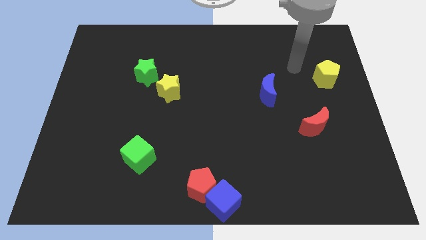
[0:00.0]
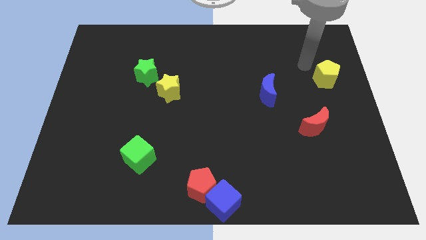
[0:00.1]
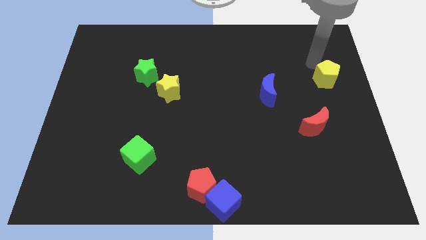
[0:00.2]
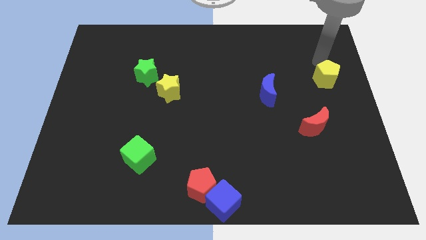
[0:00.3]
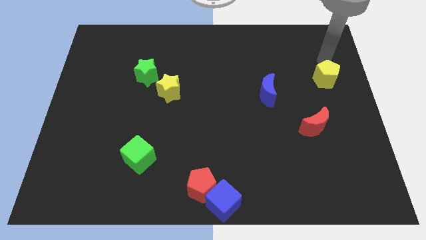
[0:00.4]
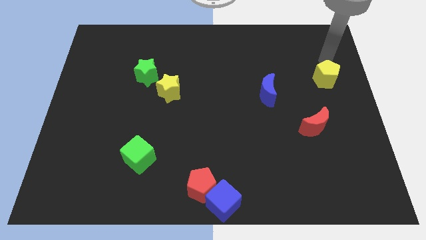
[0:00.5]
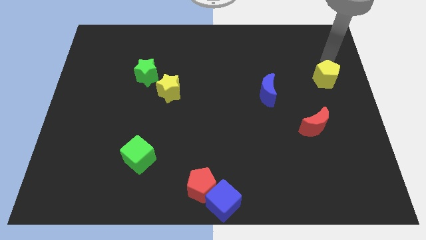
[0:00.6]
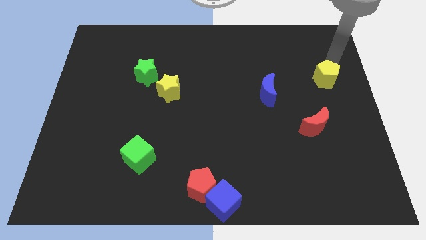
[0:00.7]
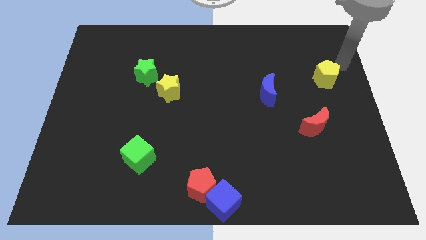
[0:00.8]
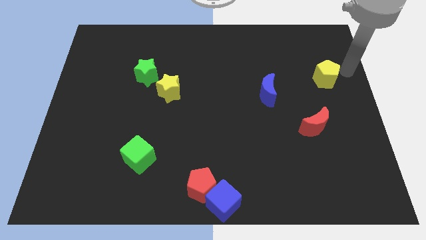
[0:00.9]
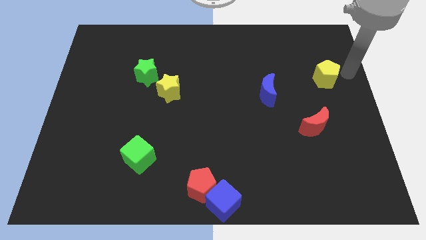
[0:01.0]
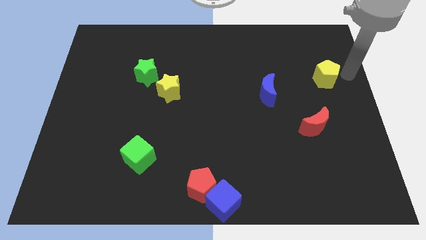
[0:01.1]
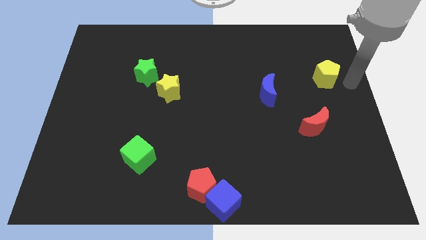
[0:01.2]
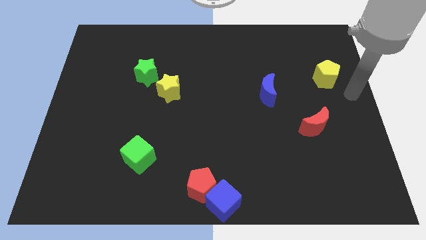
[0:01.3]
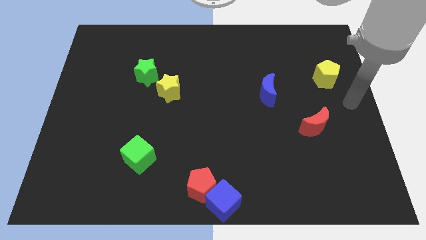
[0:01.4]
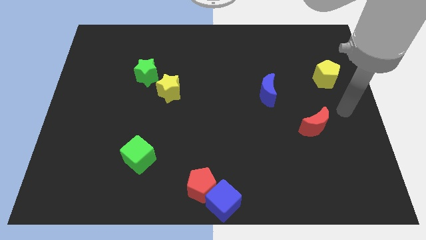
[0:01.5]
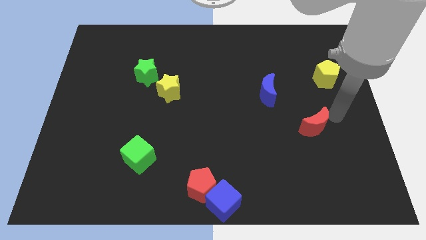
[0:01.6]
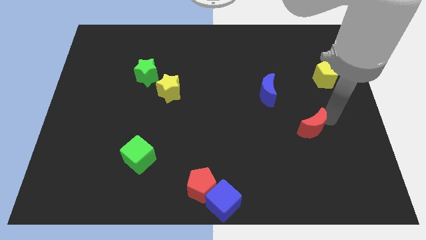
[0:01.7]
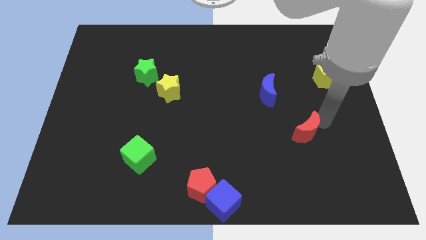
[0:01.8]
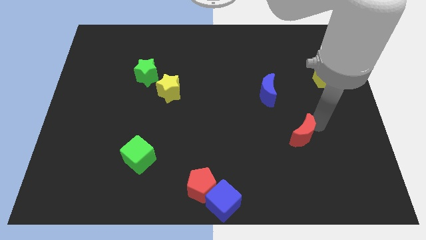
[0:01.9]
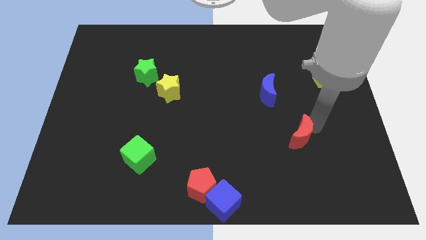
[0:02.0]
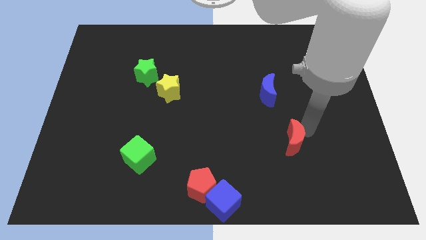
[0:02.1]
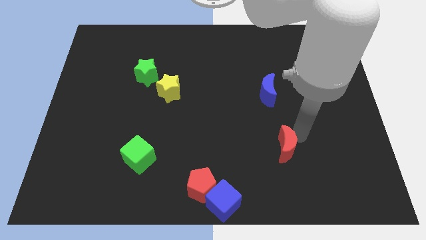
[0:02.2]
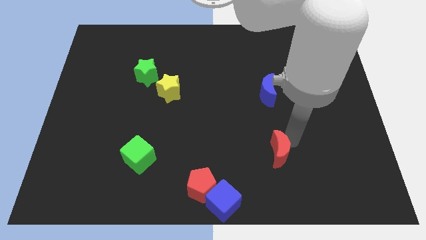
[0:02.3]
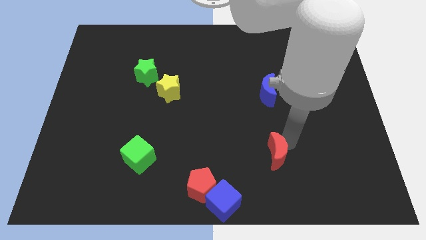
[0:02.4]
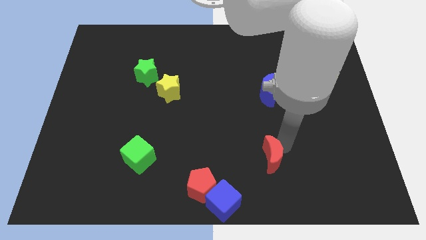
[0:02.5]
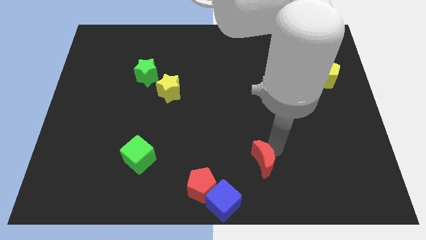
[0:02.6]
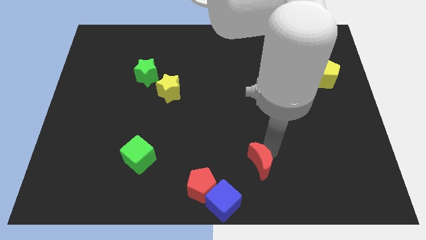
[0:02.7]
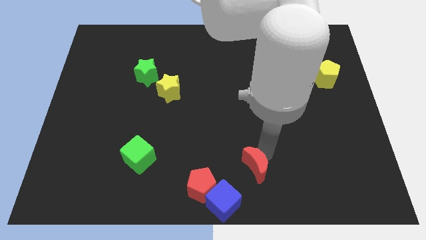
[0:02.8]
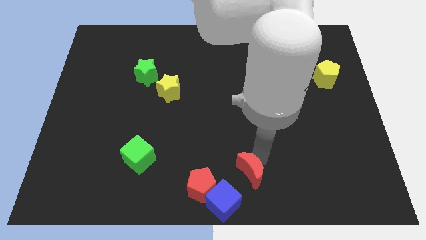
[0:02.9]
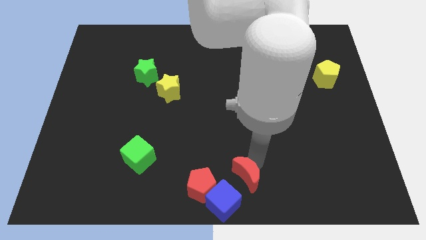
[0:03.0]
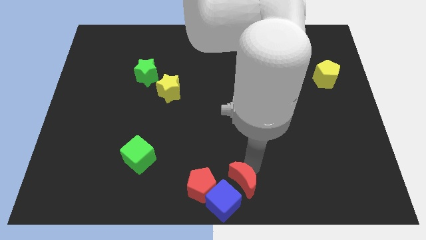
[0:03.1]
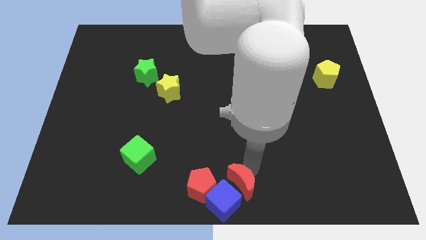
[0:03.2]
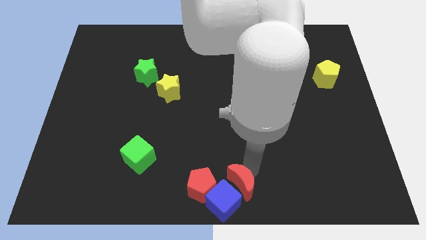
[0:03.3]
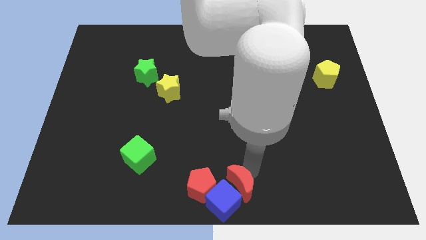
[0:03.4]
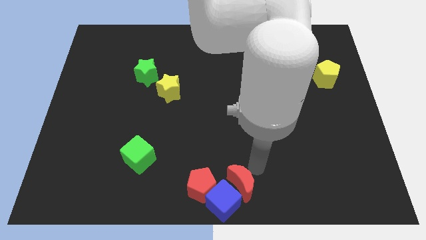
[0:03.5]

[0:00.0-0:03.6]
place the red crescent right to the red pentagon

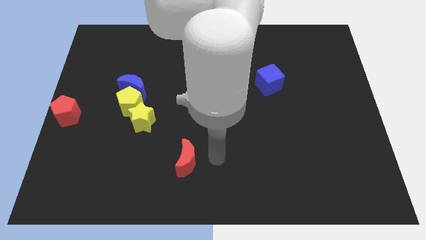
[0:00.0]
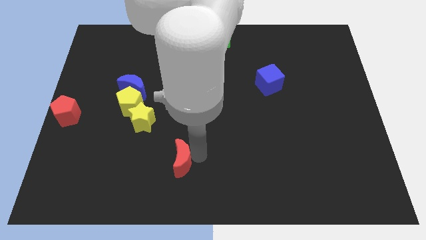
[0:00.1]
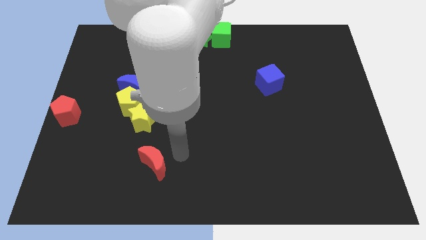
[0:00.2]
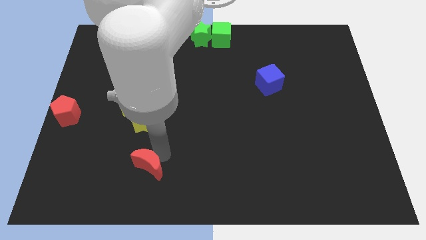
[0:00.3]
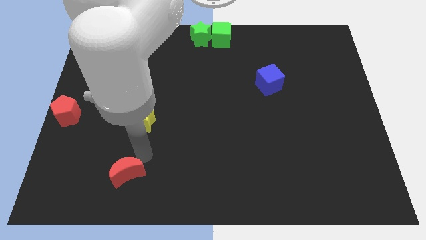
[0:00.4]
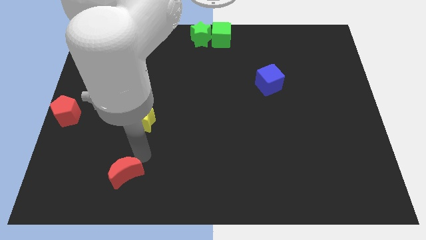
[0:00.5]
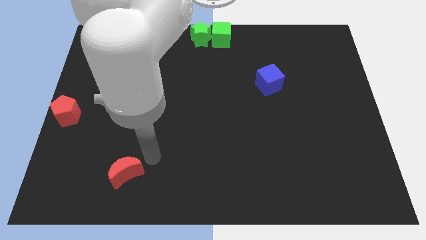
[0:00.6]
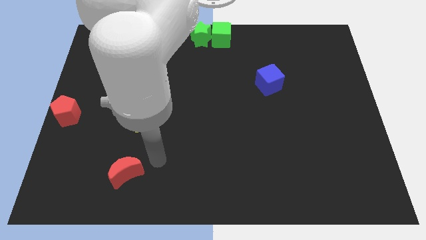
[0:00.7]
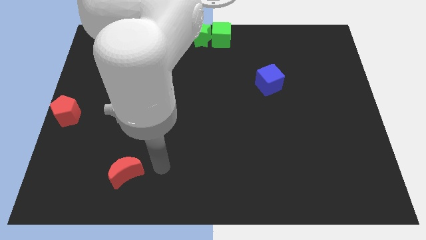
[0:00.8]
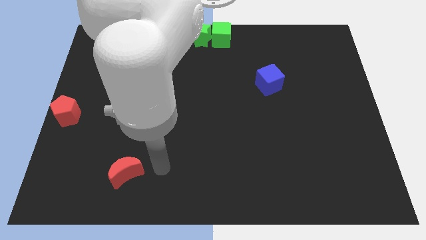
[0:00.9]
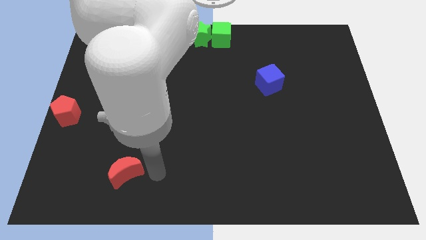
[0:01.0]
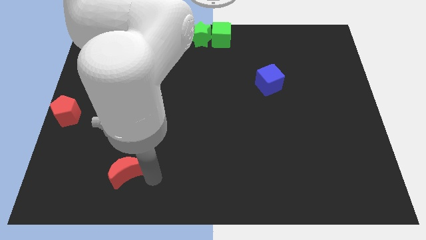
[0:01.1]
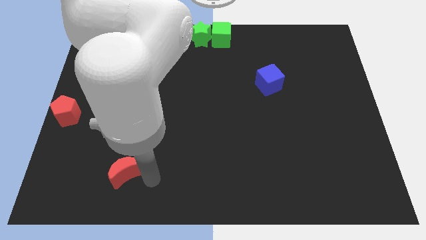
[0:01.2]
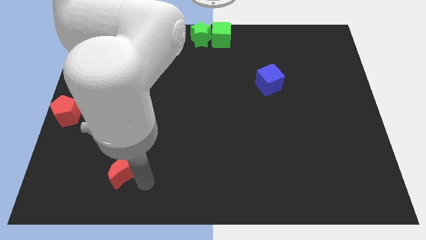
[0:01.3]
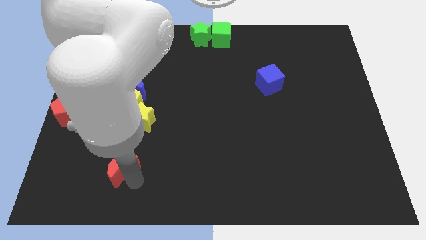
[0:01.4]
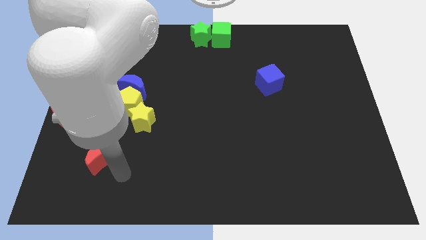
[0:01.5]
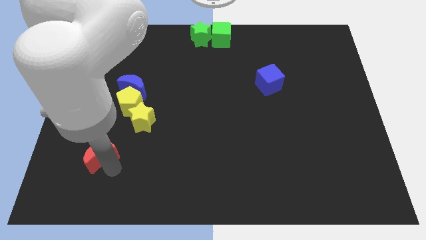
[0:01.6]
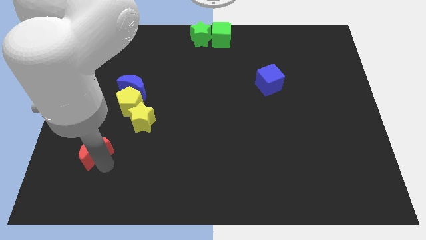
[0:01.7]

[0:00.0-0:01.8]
put the red crescent diagonally on the bottom left side of the yellow star

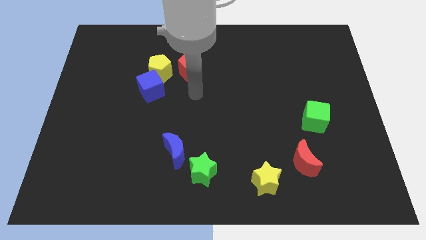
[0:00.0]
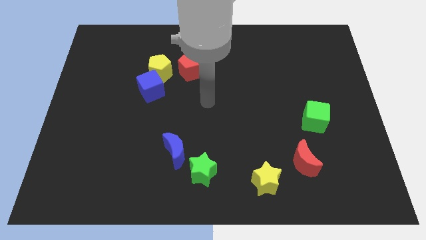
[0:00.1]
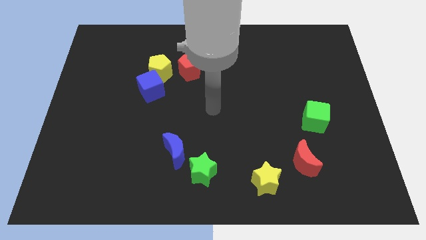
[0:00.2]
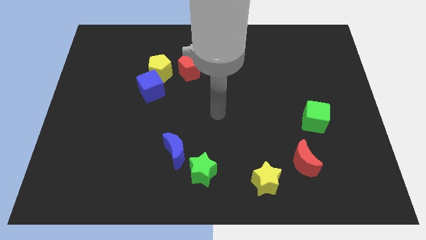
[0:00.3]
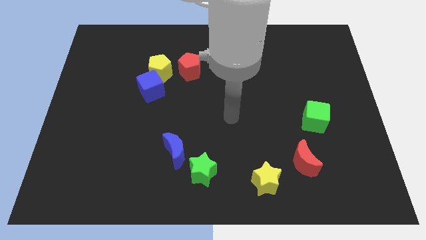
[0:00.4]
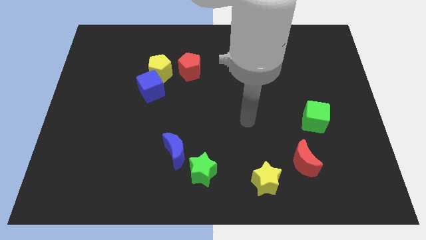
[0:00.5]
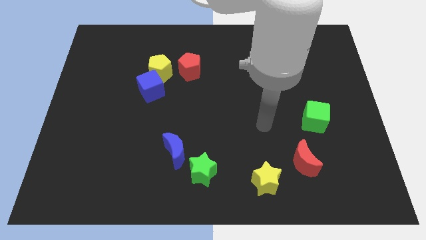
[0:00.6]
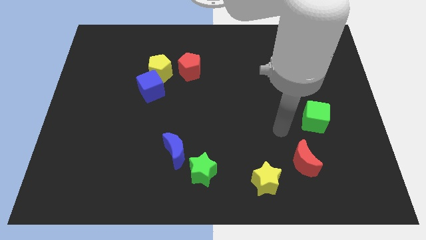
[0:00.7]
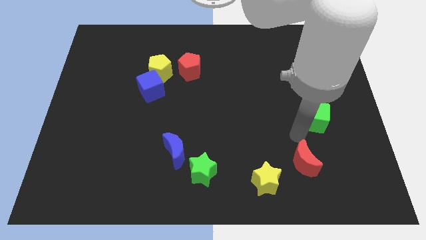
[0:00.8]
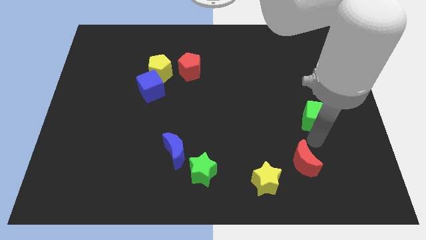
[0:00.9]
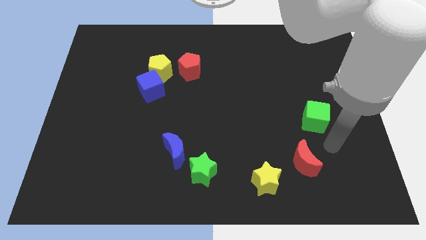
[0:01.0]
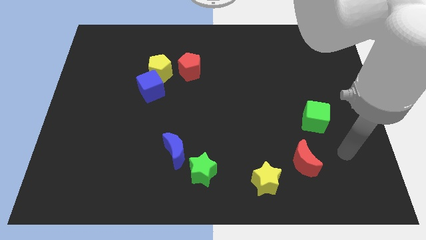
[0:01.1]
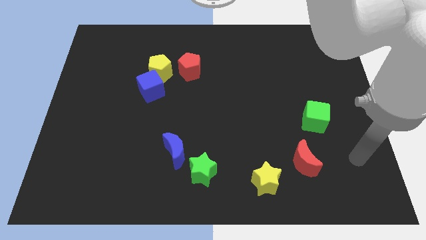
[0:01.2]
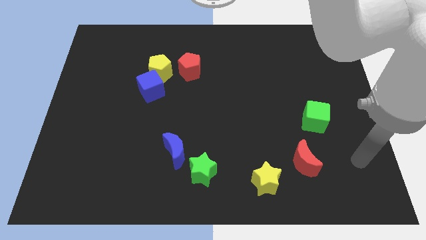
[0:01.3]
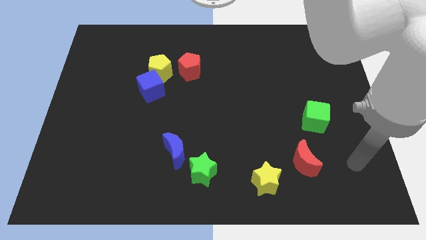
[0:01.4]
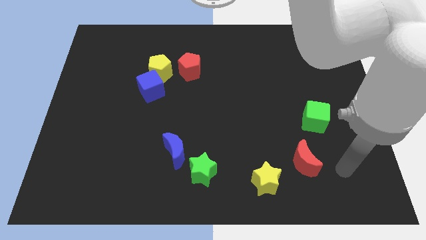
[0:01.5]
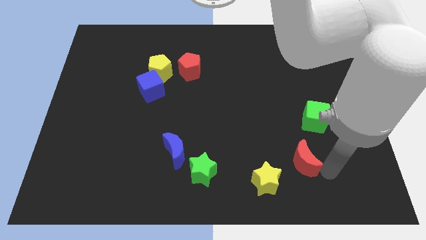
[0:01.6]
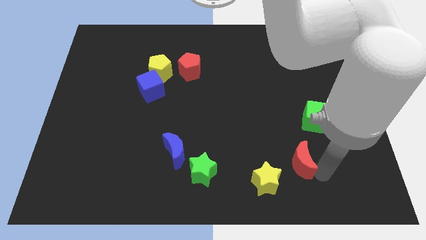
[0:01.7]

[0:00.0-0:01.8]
place the arm into the red crescent

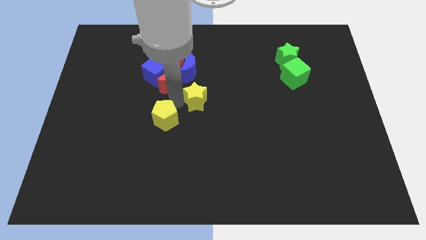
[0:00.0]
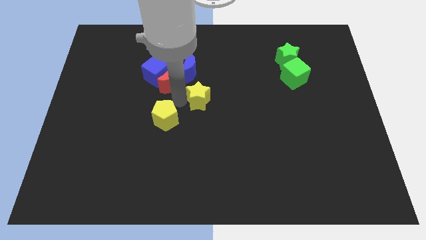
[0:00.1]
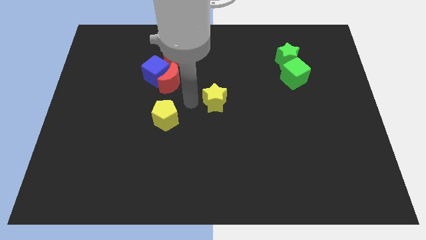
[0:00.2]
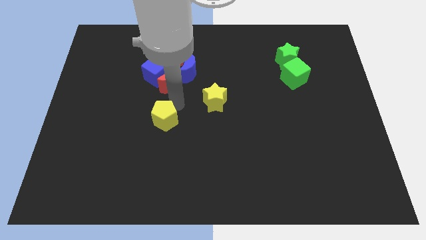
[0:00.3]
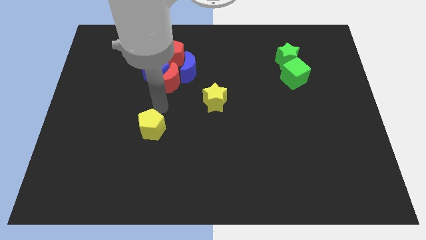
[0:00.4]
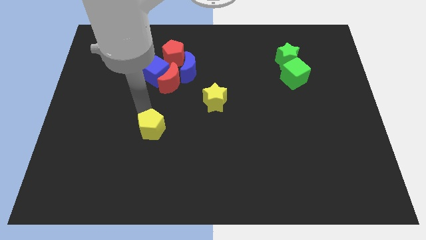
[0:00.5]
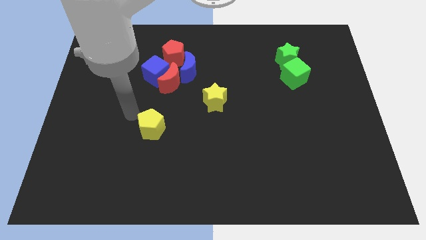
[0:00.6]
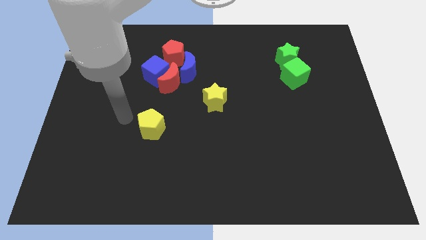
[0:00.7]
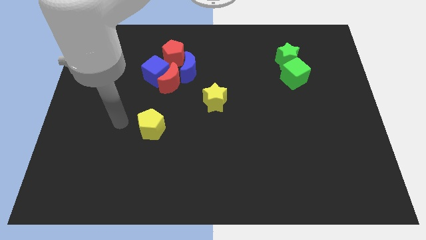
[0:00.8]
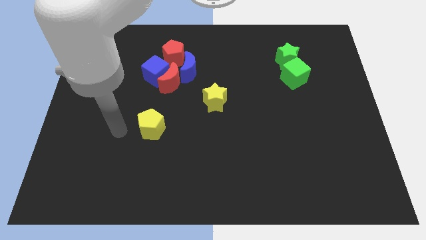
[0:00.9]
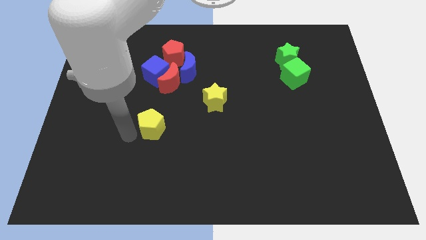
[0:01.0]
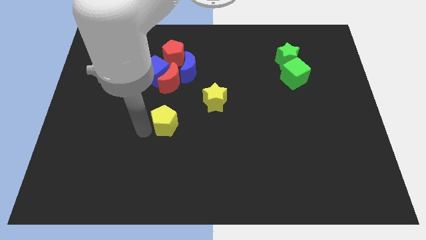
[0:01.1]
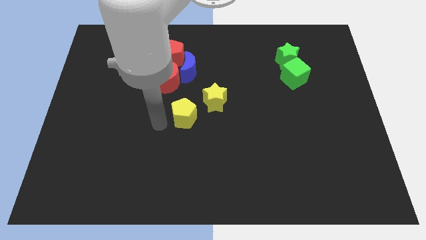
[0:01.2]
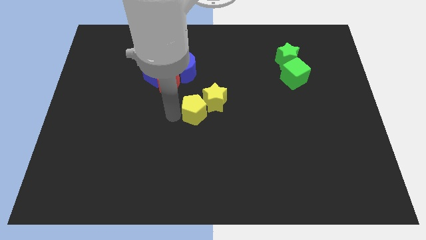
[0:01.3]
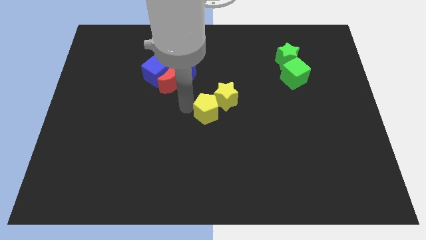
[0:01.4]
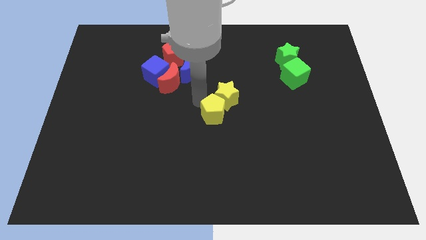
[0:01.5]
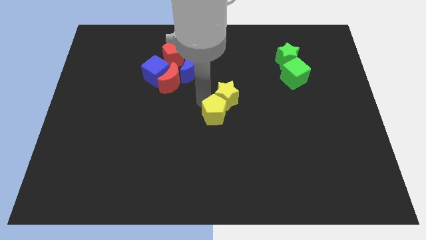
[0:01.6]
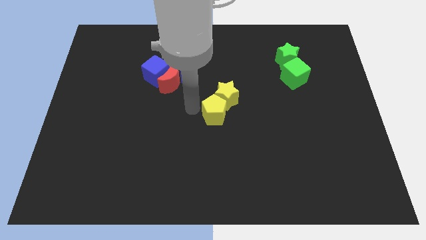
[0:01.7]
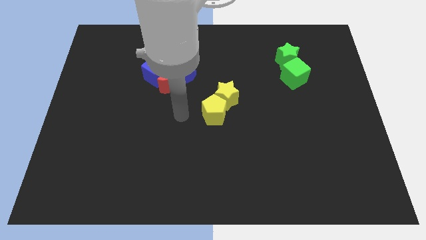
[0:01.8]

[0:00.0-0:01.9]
move the yellow blocks towards the right
